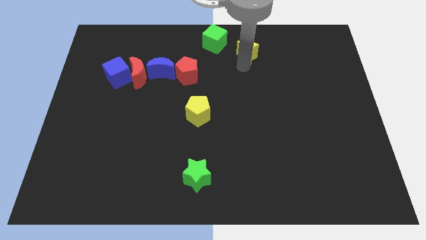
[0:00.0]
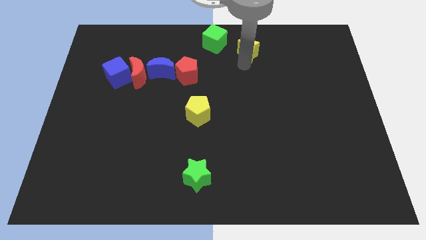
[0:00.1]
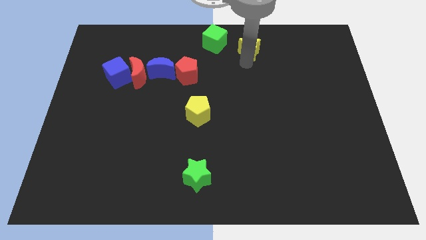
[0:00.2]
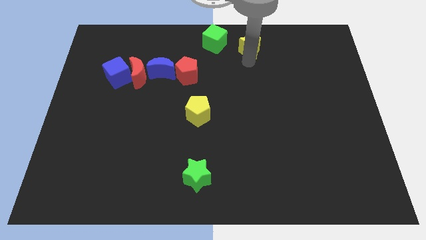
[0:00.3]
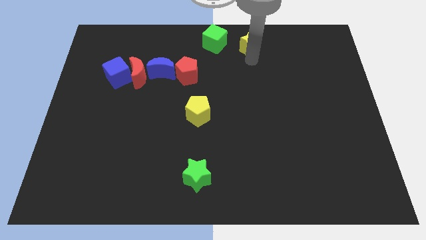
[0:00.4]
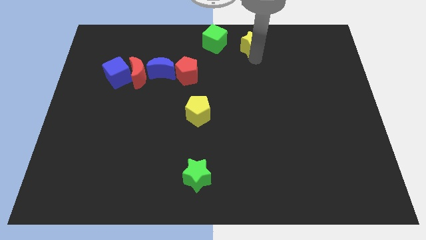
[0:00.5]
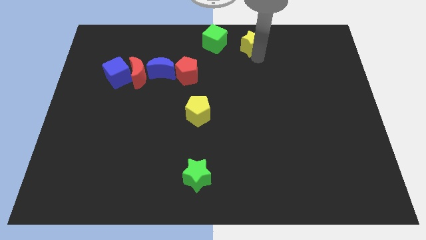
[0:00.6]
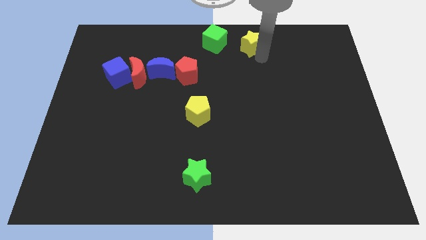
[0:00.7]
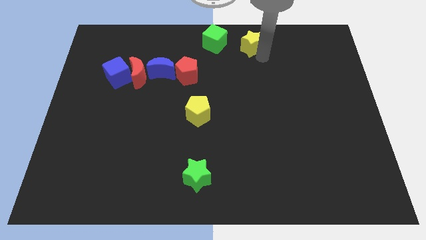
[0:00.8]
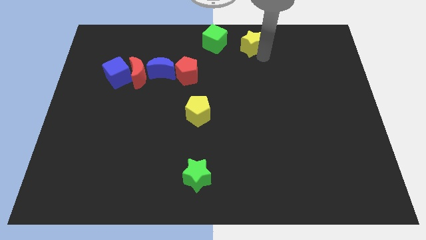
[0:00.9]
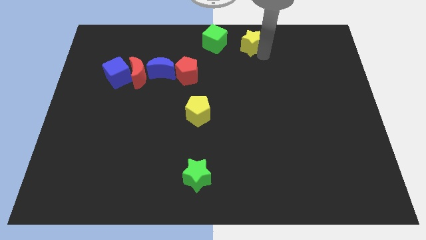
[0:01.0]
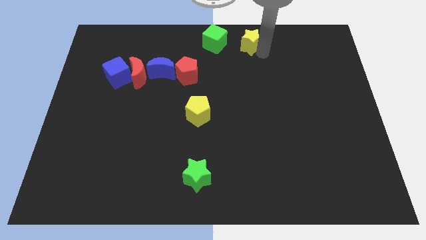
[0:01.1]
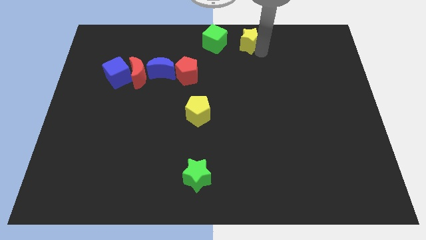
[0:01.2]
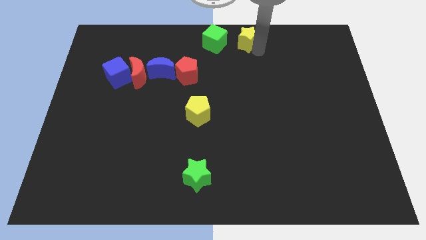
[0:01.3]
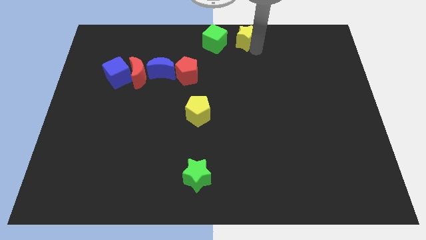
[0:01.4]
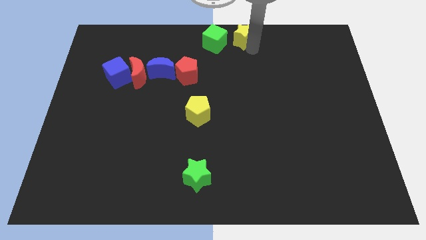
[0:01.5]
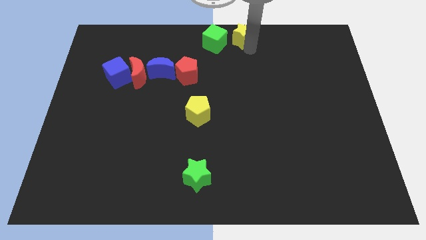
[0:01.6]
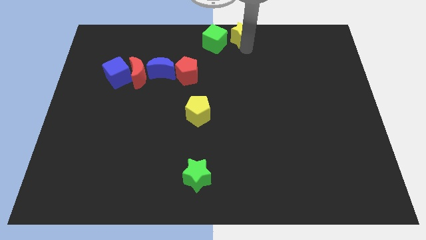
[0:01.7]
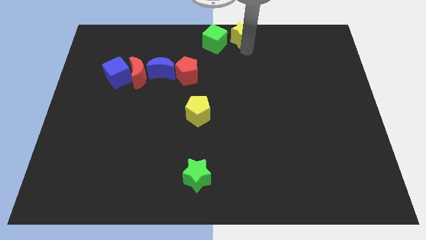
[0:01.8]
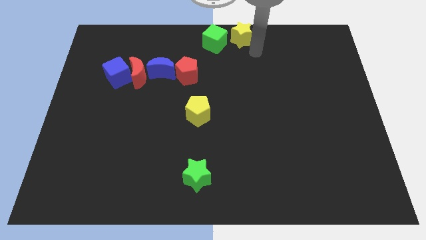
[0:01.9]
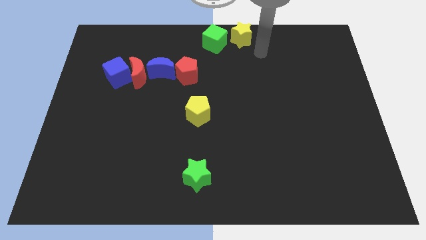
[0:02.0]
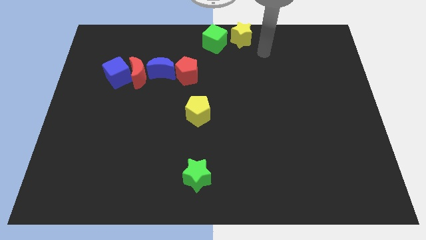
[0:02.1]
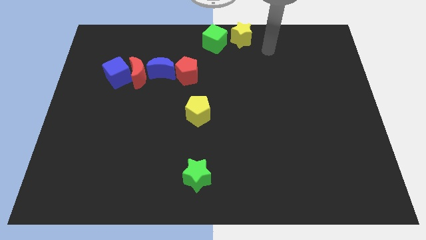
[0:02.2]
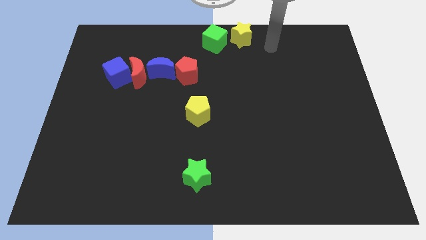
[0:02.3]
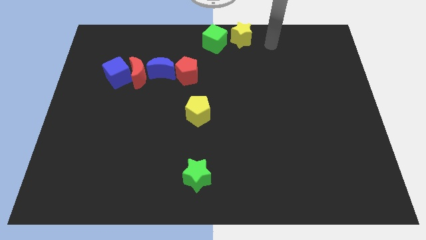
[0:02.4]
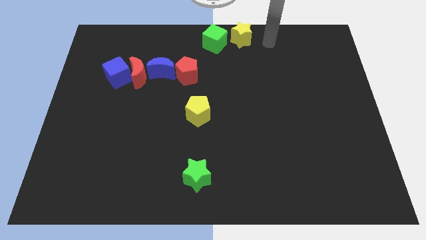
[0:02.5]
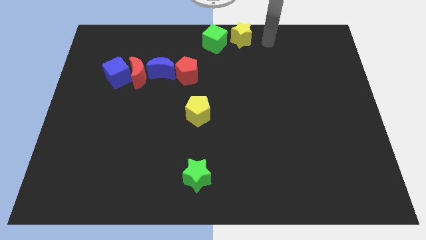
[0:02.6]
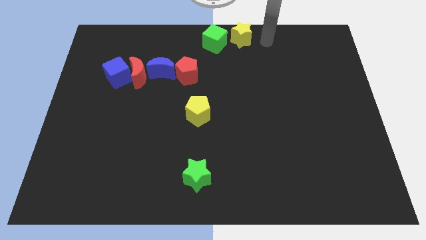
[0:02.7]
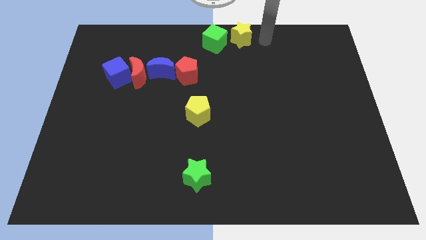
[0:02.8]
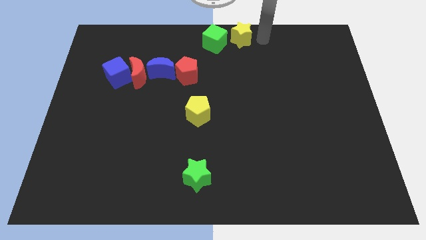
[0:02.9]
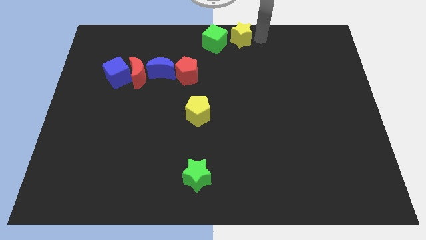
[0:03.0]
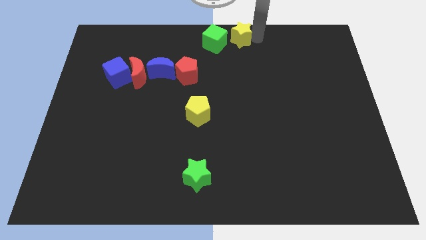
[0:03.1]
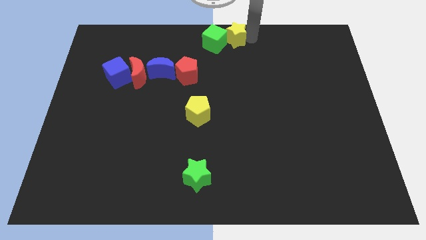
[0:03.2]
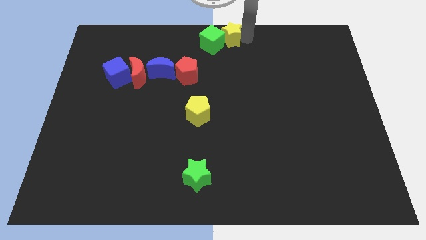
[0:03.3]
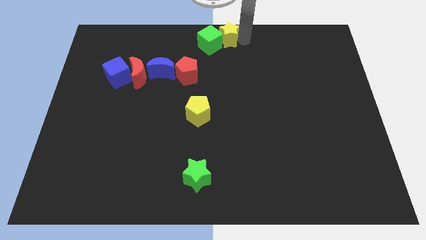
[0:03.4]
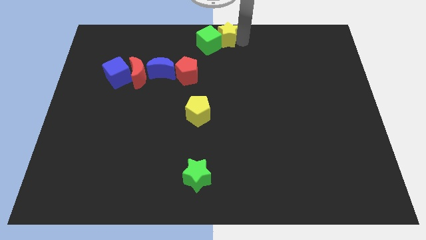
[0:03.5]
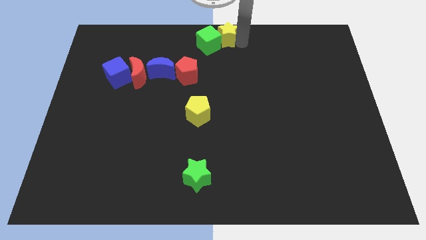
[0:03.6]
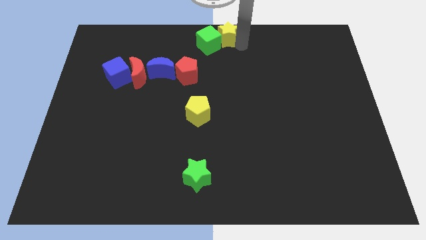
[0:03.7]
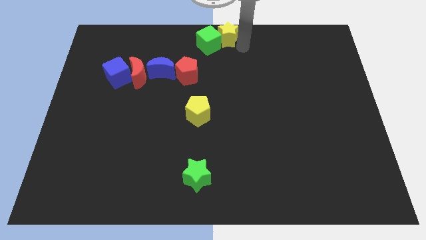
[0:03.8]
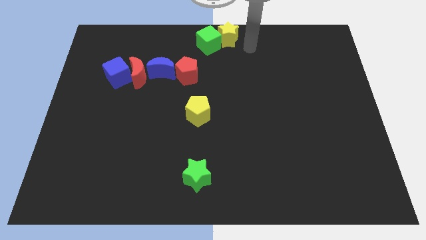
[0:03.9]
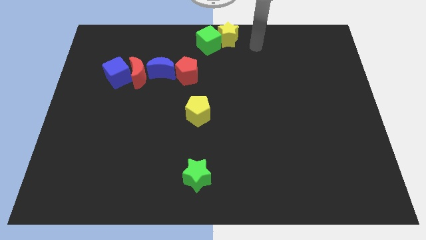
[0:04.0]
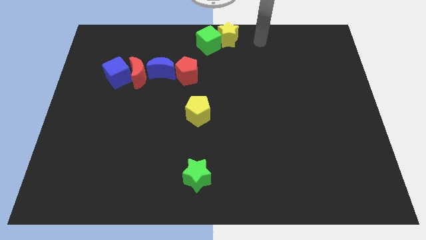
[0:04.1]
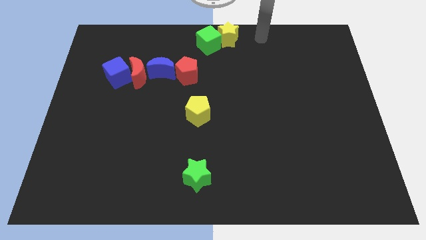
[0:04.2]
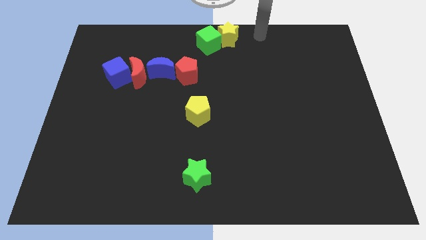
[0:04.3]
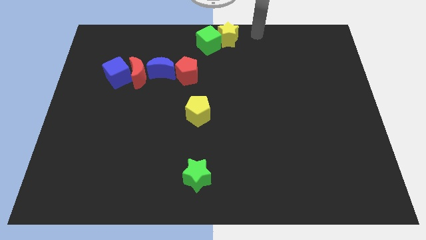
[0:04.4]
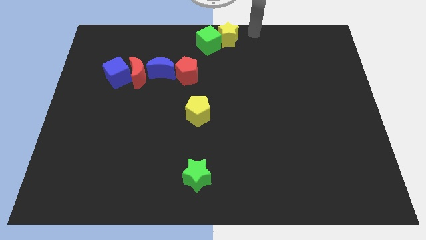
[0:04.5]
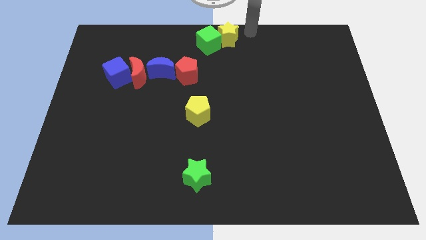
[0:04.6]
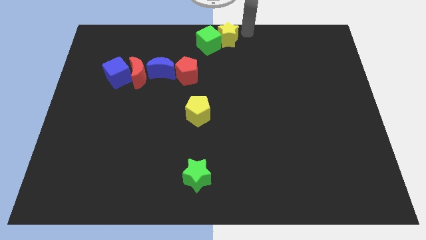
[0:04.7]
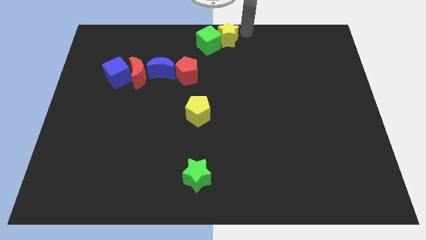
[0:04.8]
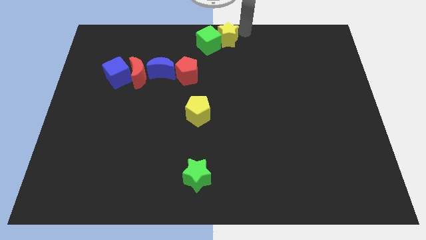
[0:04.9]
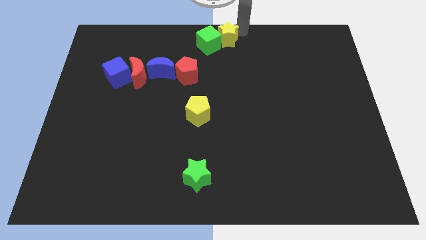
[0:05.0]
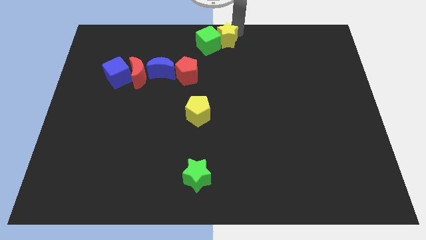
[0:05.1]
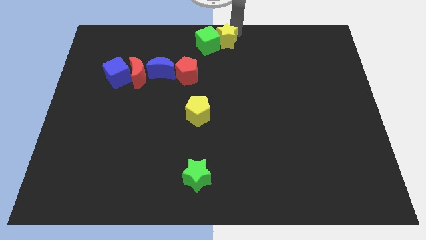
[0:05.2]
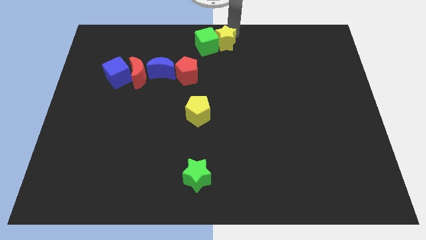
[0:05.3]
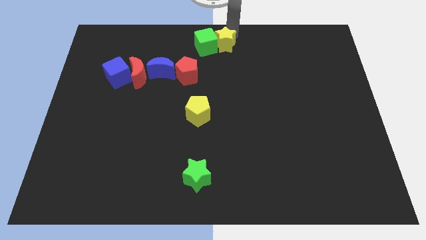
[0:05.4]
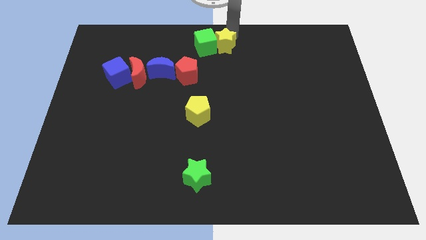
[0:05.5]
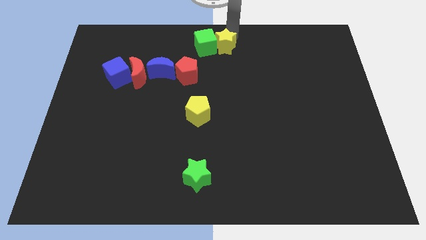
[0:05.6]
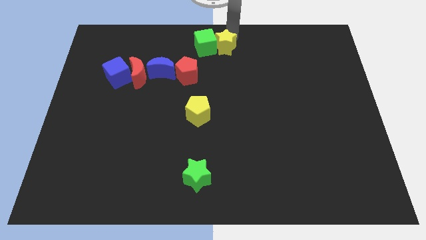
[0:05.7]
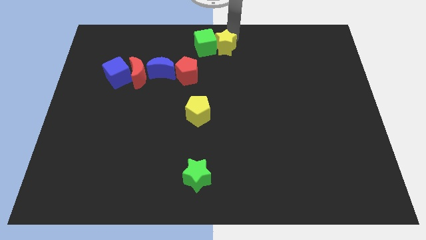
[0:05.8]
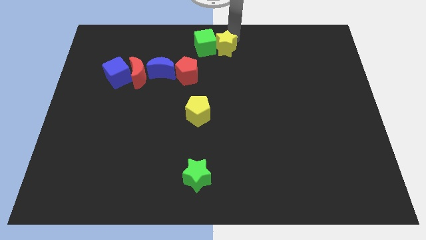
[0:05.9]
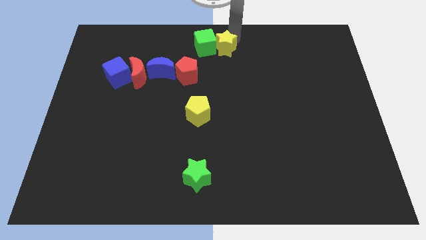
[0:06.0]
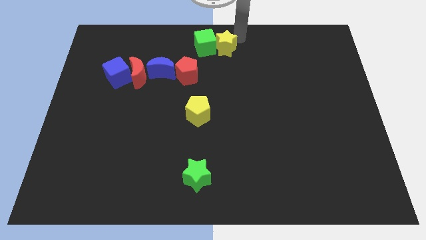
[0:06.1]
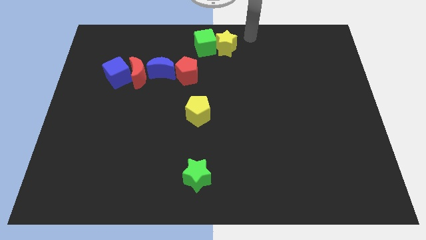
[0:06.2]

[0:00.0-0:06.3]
push the green cube and yellow star to the top right side of the red pentagon

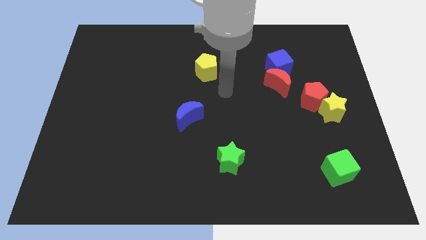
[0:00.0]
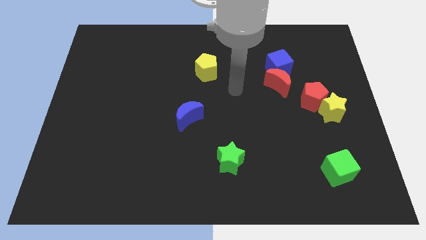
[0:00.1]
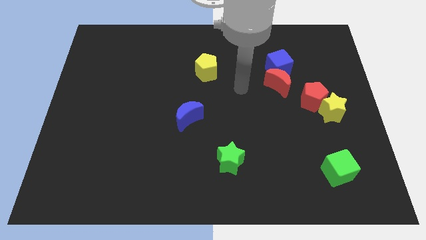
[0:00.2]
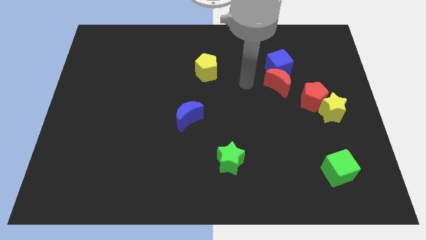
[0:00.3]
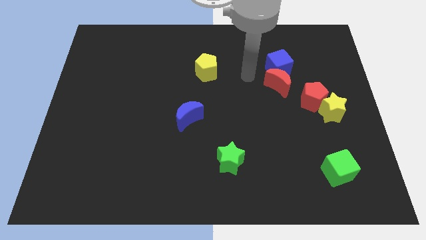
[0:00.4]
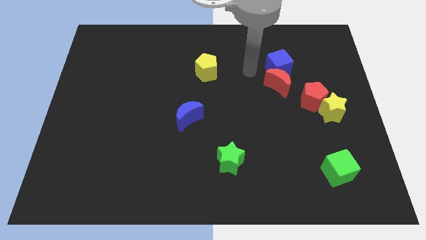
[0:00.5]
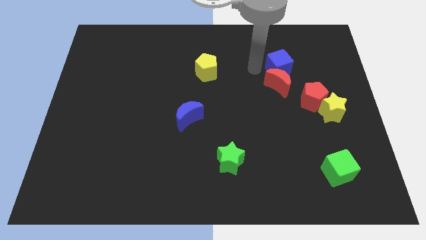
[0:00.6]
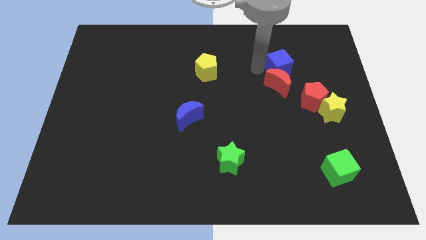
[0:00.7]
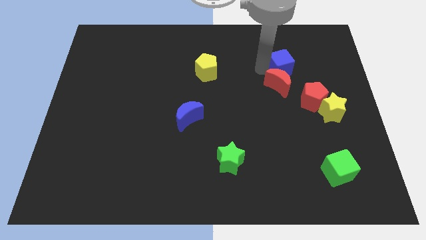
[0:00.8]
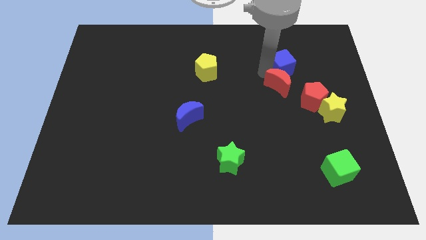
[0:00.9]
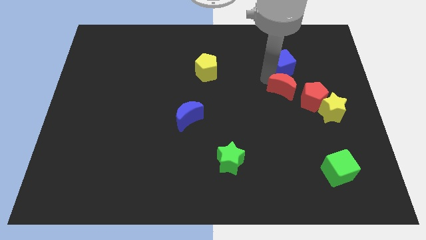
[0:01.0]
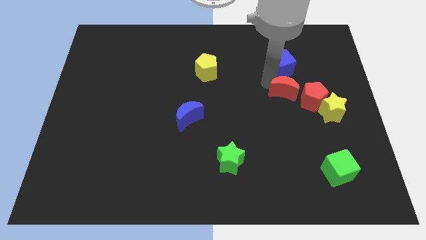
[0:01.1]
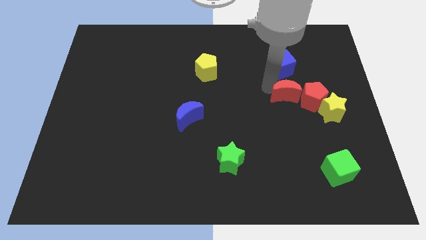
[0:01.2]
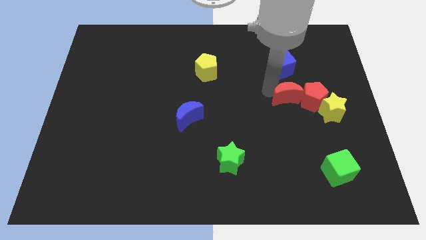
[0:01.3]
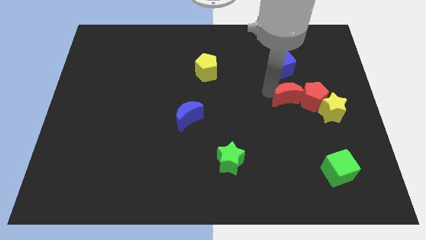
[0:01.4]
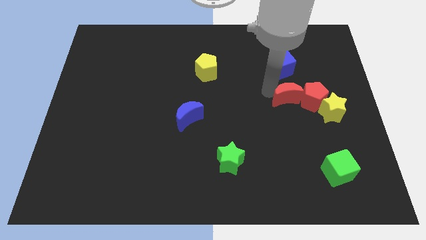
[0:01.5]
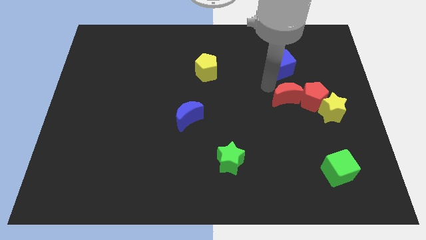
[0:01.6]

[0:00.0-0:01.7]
push the red crescent to the left of the red pentagon

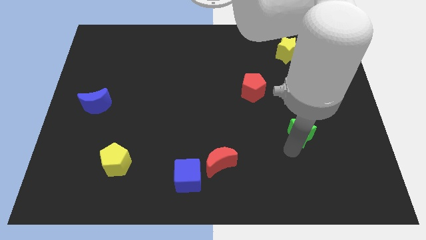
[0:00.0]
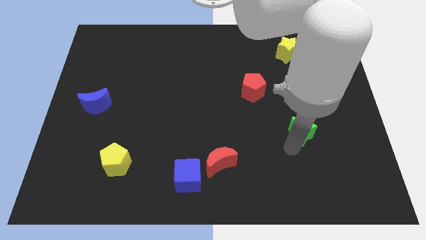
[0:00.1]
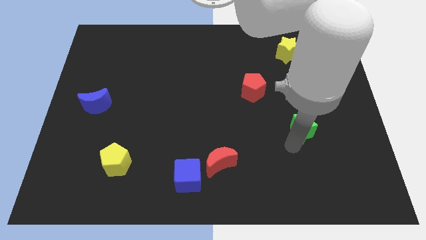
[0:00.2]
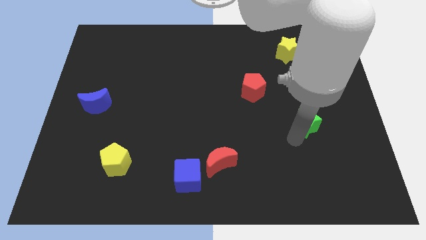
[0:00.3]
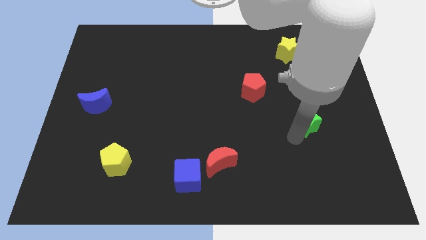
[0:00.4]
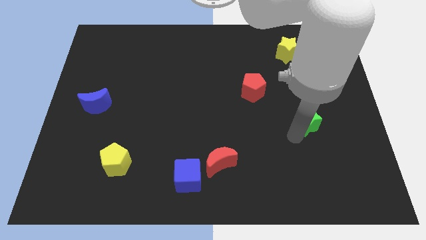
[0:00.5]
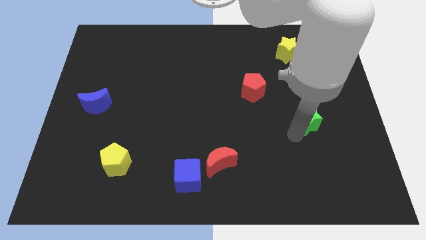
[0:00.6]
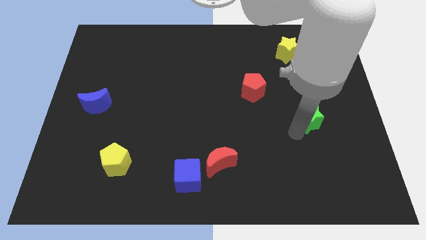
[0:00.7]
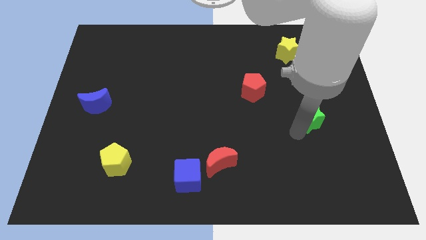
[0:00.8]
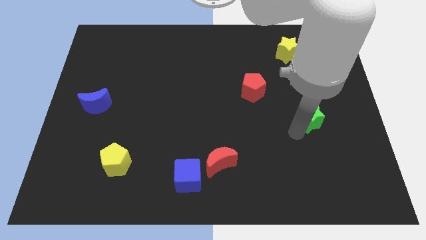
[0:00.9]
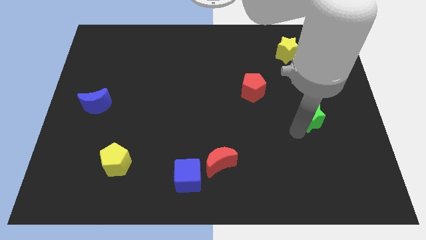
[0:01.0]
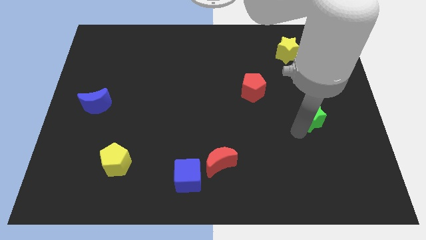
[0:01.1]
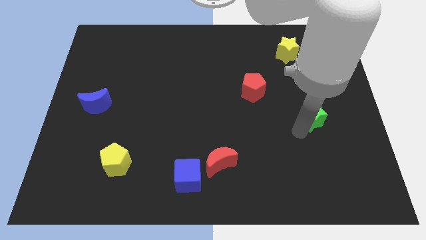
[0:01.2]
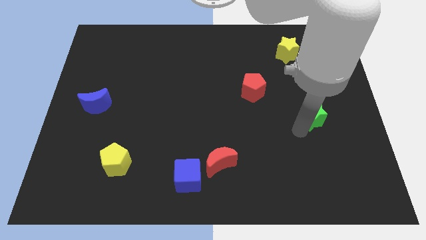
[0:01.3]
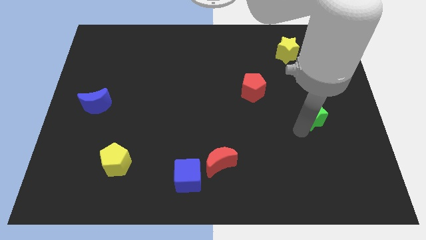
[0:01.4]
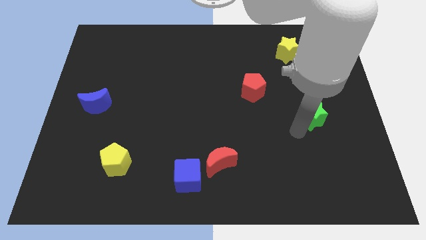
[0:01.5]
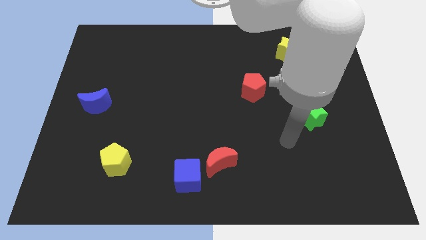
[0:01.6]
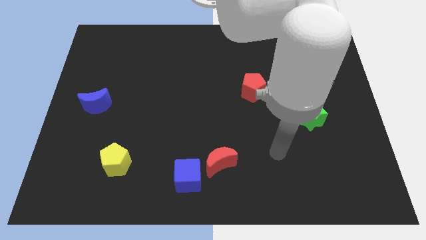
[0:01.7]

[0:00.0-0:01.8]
move green star towards the green cube
